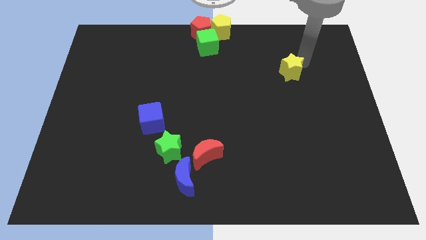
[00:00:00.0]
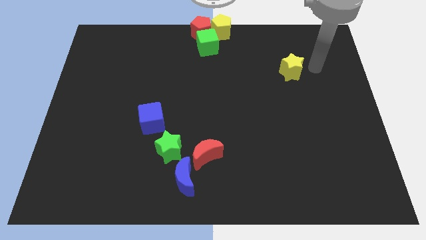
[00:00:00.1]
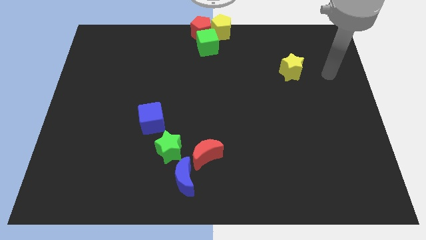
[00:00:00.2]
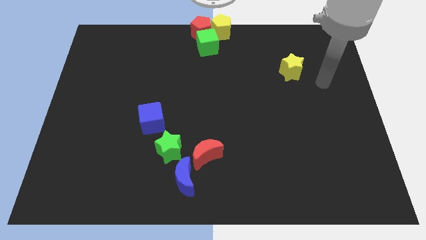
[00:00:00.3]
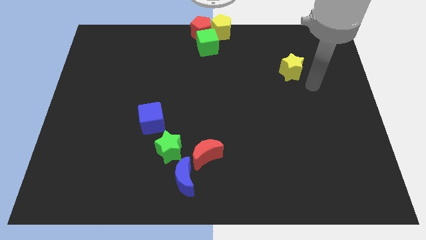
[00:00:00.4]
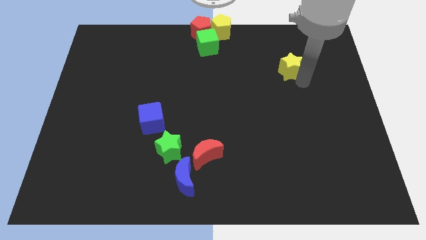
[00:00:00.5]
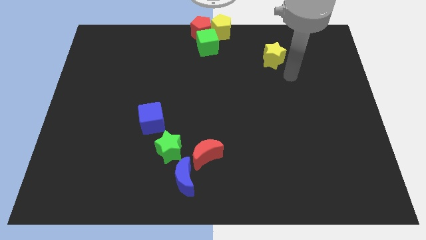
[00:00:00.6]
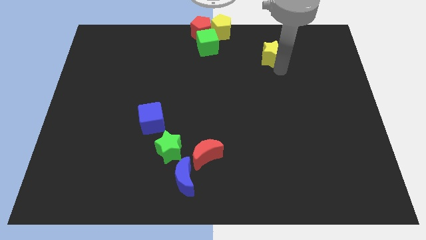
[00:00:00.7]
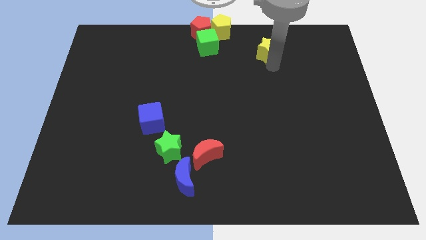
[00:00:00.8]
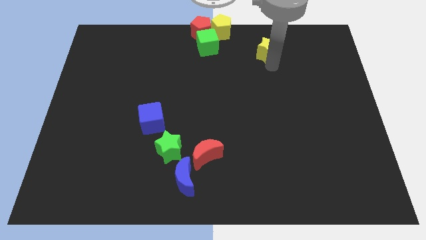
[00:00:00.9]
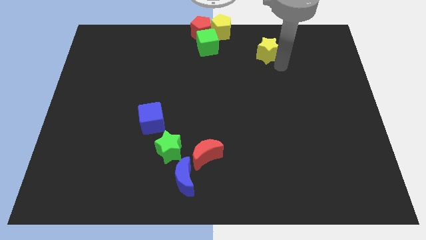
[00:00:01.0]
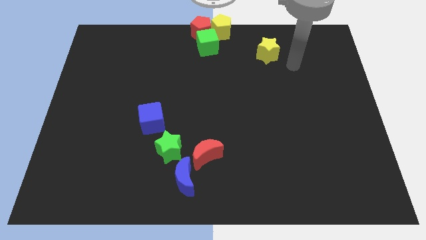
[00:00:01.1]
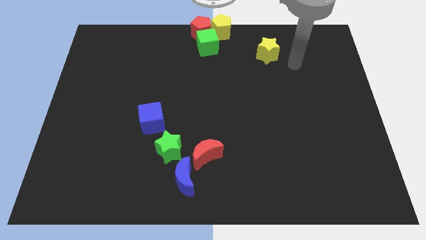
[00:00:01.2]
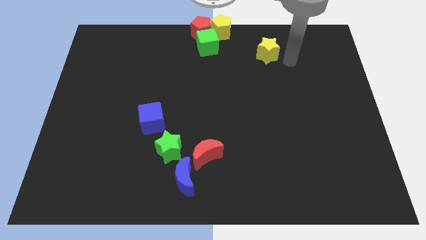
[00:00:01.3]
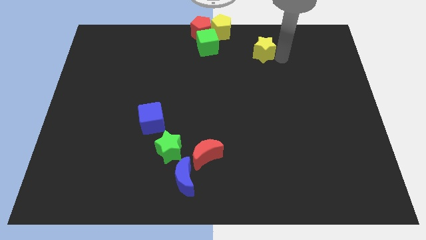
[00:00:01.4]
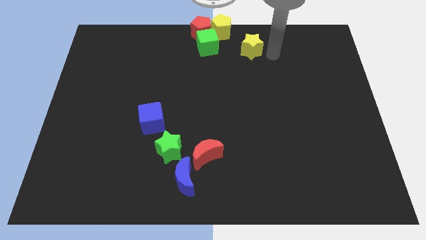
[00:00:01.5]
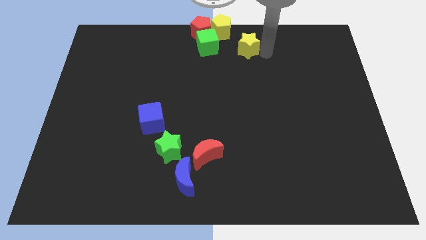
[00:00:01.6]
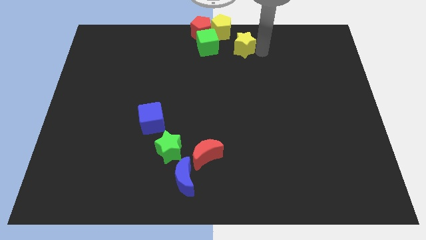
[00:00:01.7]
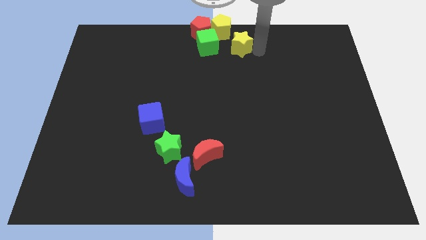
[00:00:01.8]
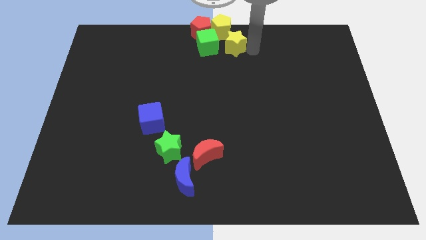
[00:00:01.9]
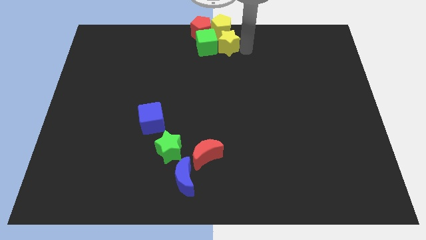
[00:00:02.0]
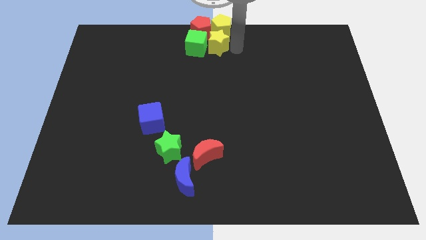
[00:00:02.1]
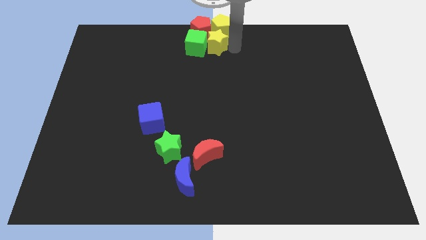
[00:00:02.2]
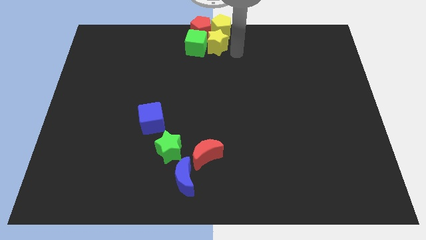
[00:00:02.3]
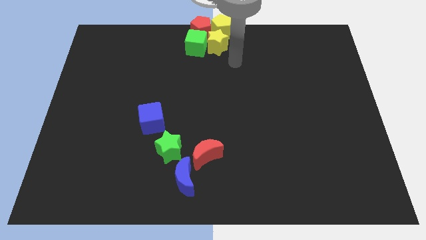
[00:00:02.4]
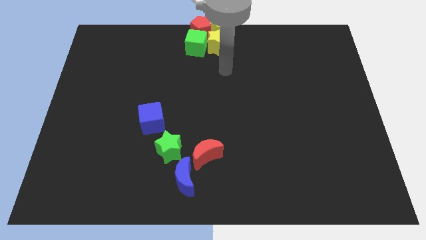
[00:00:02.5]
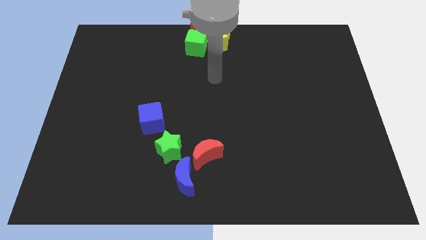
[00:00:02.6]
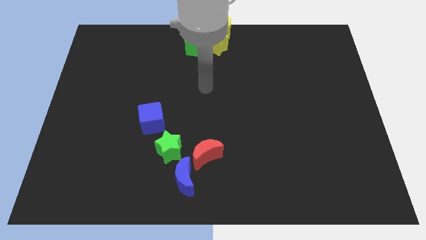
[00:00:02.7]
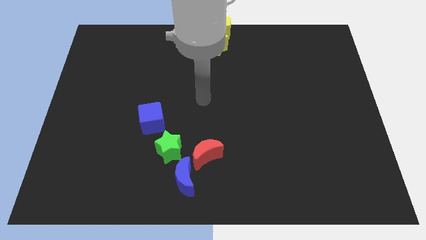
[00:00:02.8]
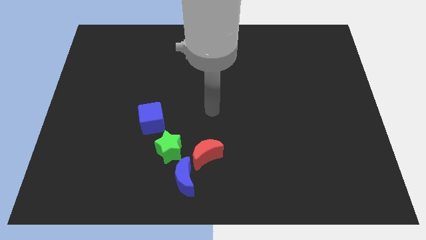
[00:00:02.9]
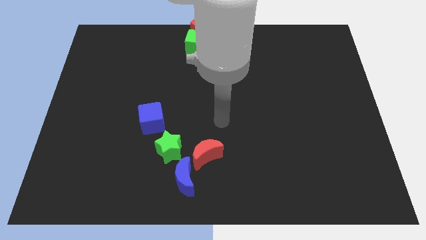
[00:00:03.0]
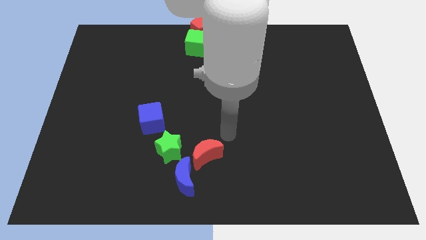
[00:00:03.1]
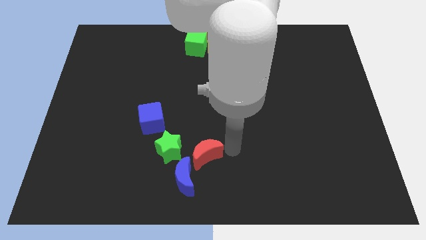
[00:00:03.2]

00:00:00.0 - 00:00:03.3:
push yellow star in to green cube

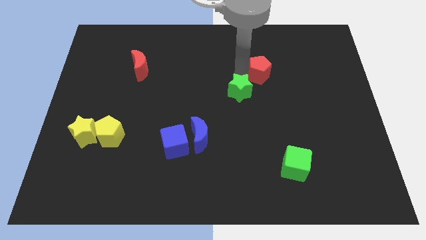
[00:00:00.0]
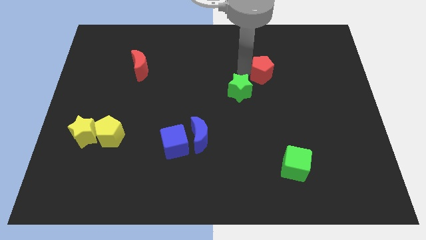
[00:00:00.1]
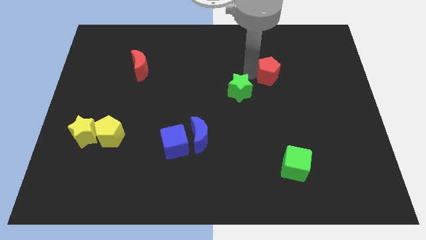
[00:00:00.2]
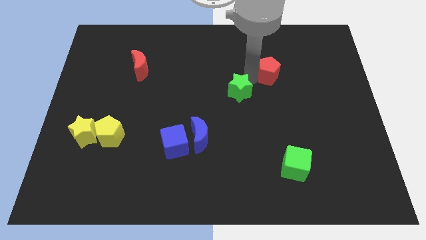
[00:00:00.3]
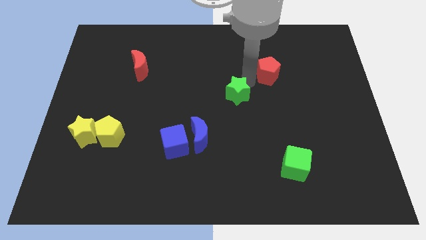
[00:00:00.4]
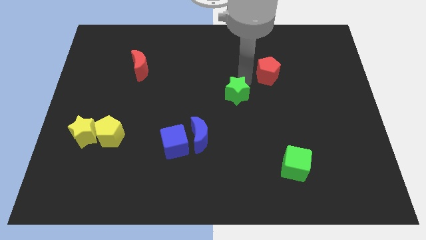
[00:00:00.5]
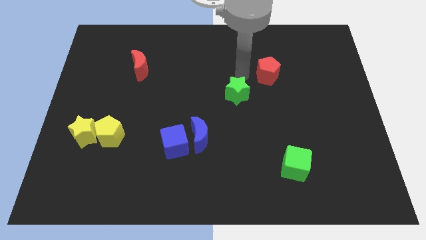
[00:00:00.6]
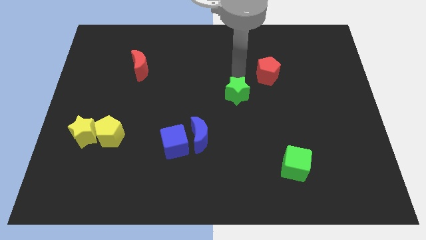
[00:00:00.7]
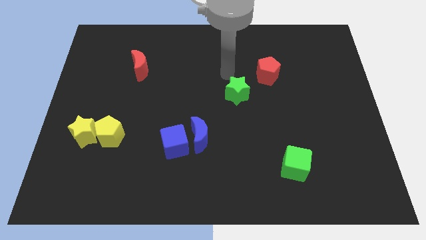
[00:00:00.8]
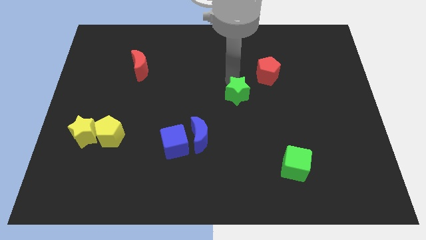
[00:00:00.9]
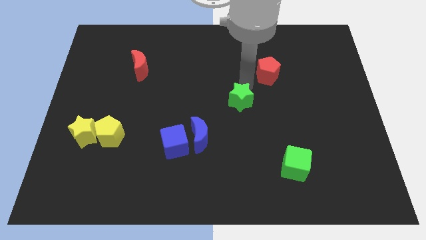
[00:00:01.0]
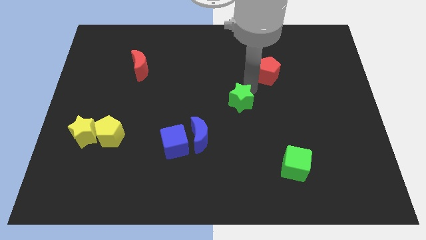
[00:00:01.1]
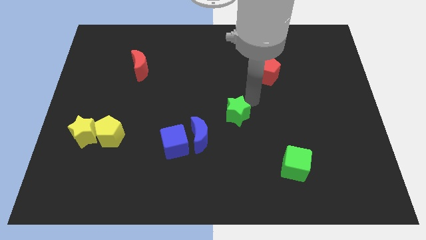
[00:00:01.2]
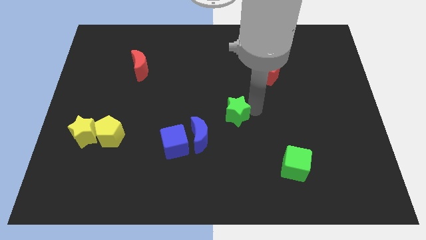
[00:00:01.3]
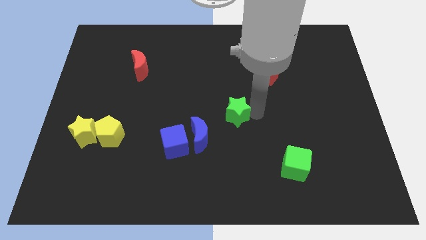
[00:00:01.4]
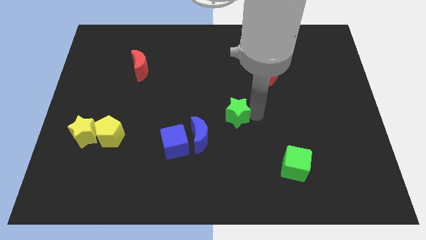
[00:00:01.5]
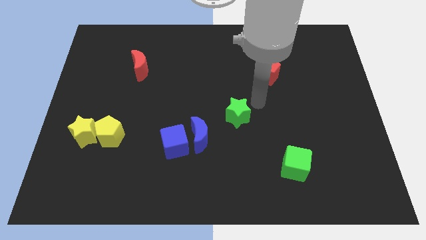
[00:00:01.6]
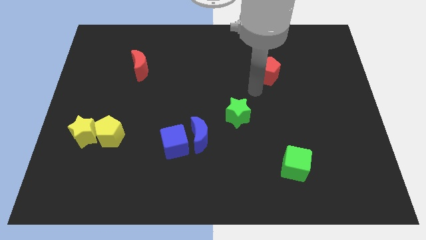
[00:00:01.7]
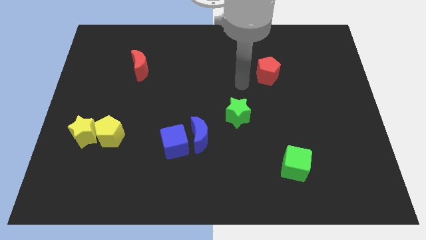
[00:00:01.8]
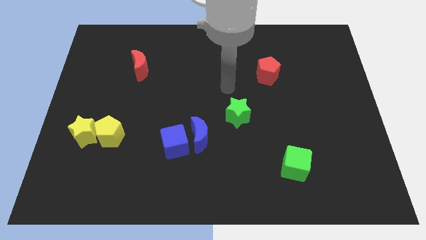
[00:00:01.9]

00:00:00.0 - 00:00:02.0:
push the green star diagonal right of blue moon

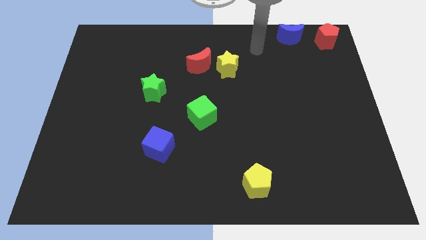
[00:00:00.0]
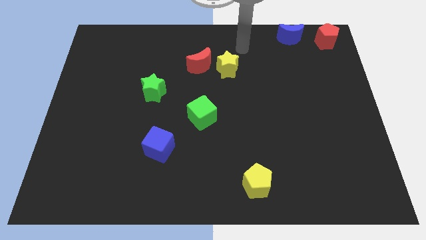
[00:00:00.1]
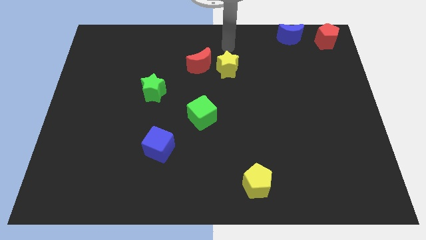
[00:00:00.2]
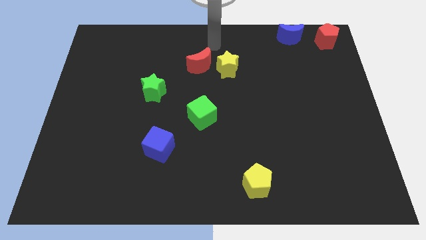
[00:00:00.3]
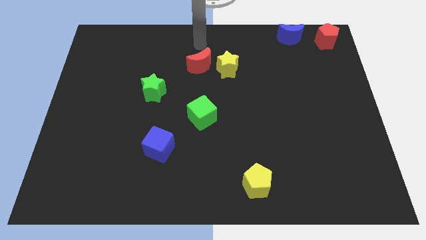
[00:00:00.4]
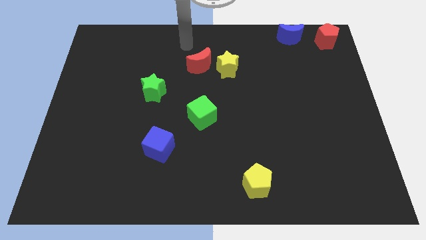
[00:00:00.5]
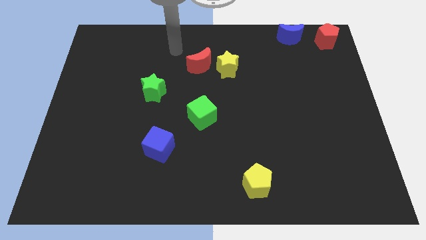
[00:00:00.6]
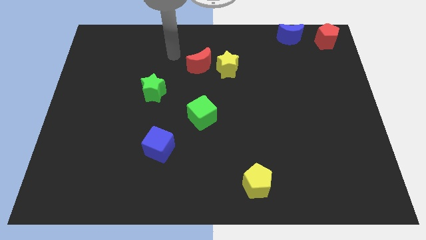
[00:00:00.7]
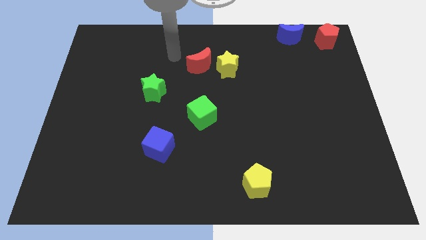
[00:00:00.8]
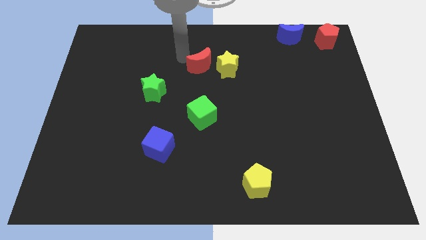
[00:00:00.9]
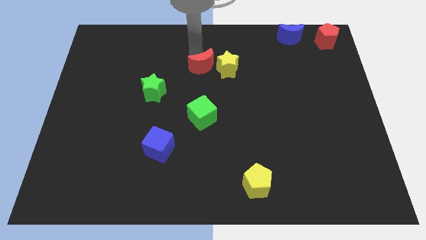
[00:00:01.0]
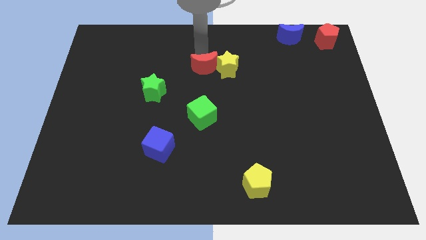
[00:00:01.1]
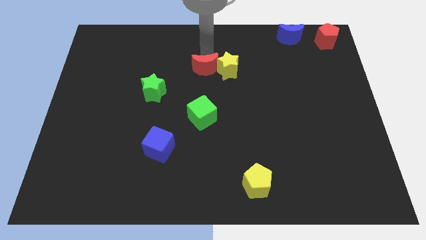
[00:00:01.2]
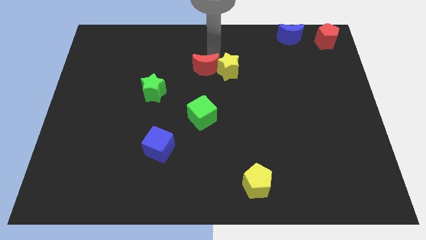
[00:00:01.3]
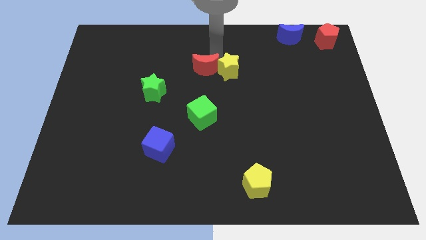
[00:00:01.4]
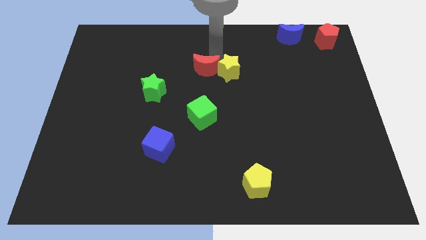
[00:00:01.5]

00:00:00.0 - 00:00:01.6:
push the red moon into the yellow star

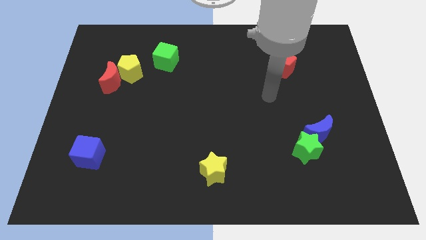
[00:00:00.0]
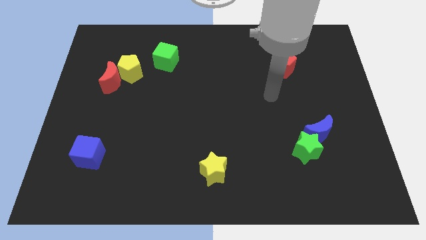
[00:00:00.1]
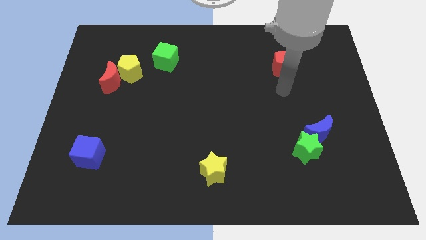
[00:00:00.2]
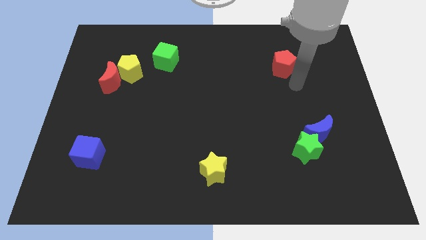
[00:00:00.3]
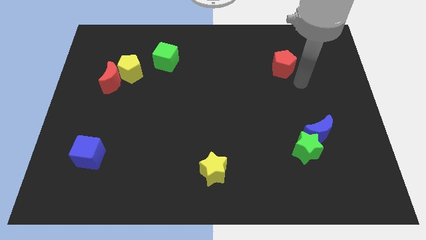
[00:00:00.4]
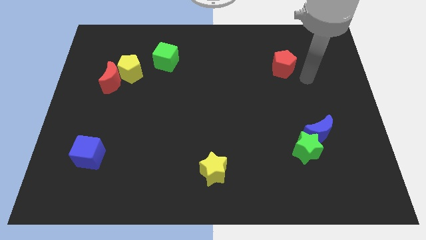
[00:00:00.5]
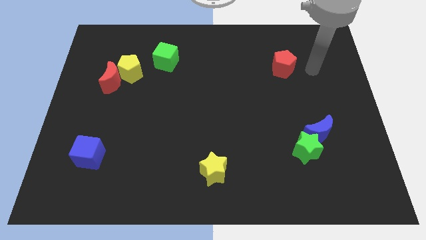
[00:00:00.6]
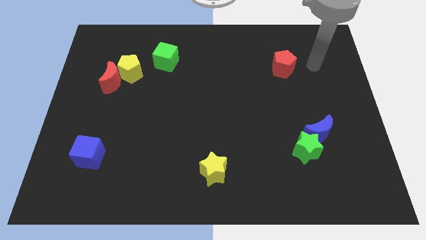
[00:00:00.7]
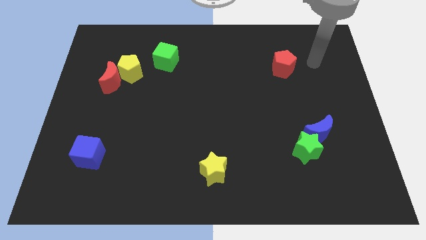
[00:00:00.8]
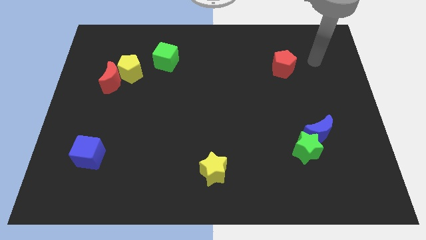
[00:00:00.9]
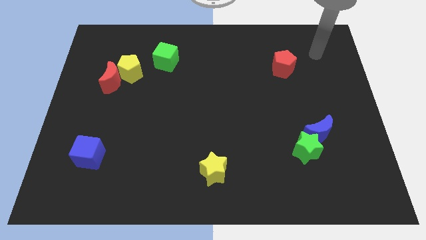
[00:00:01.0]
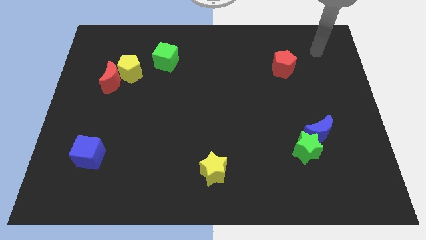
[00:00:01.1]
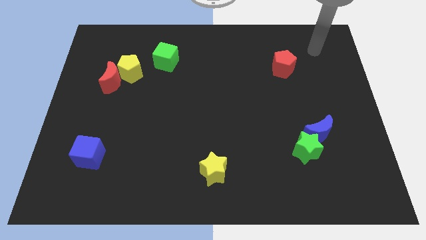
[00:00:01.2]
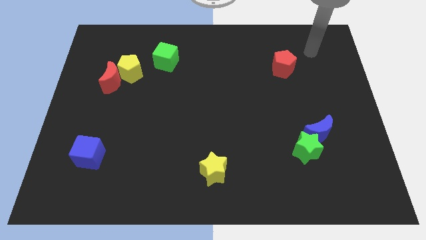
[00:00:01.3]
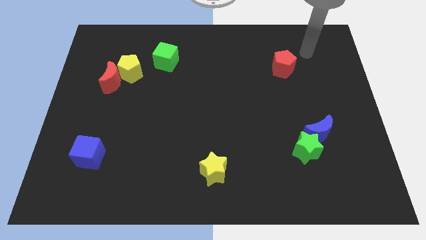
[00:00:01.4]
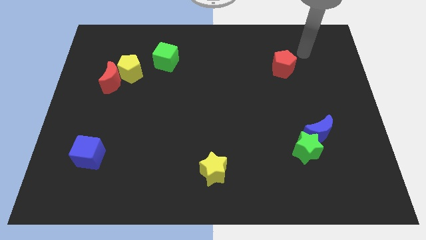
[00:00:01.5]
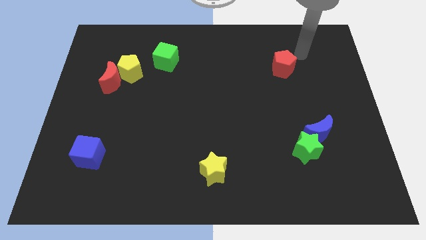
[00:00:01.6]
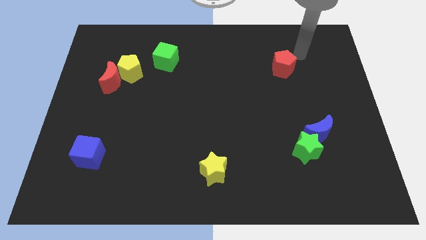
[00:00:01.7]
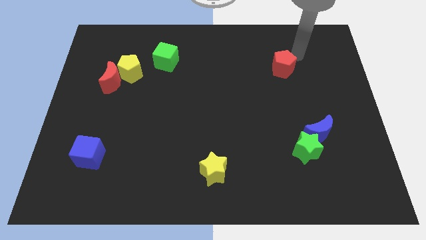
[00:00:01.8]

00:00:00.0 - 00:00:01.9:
place the arm near the red pentagon
